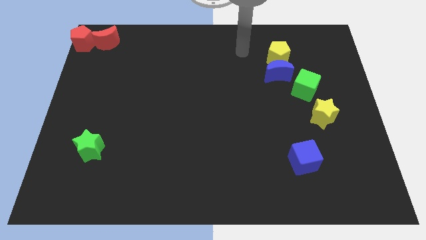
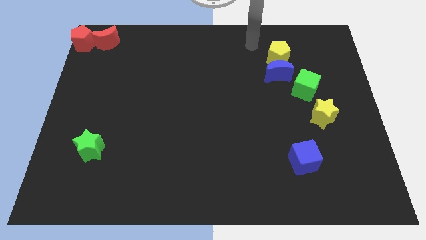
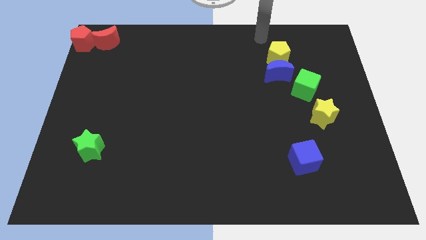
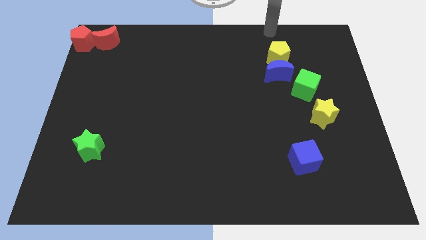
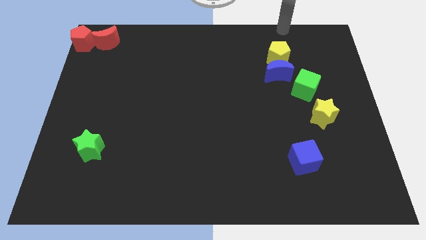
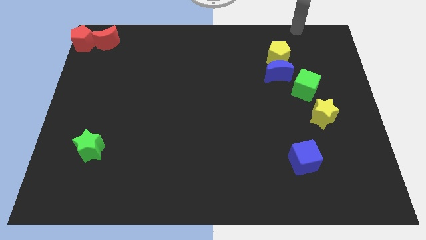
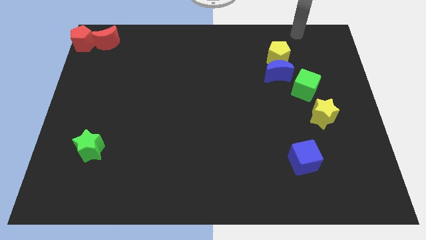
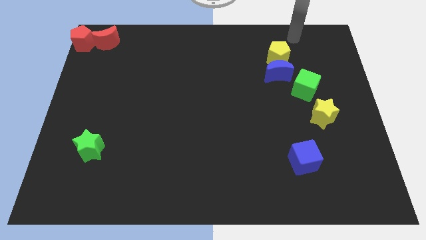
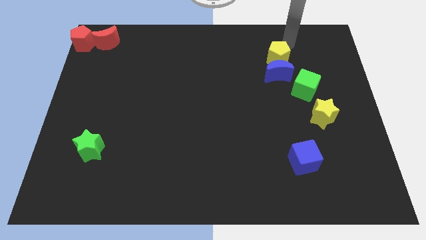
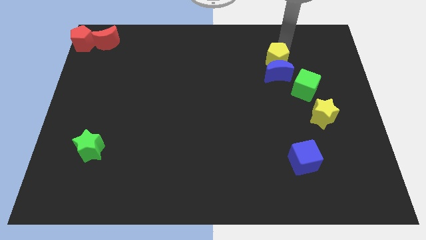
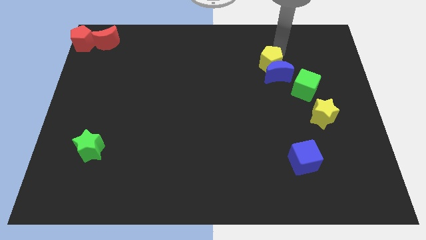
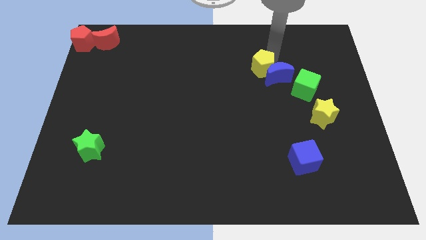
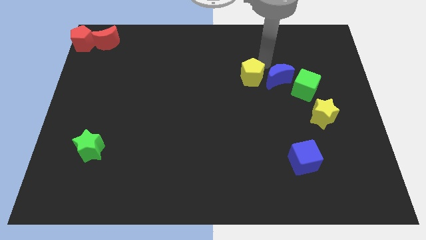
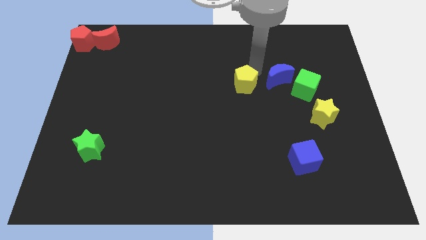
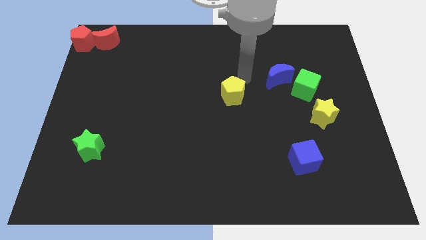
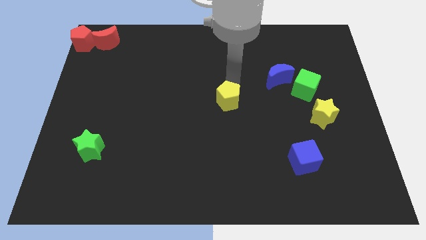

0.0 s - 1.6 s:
take the yellow pentagon away from the blue crescent

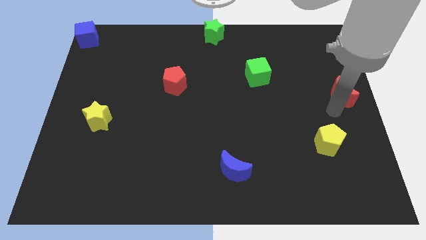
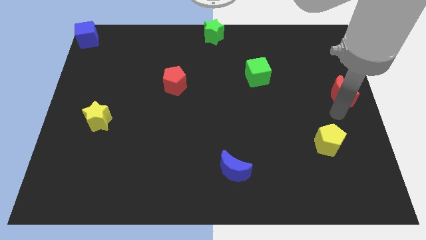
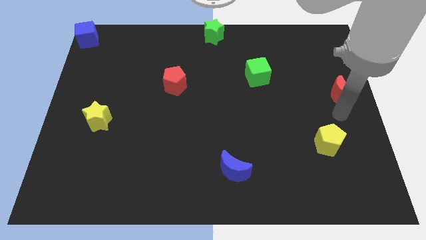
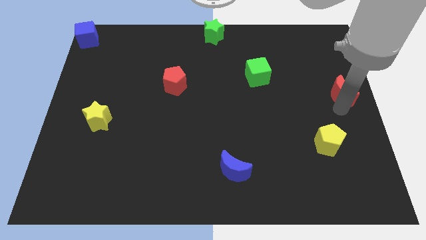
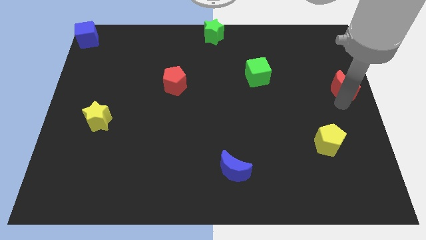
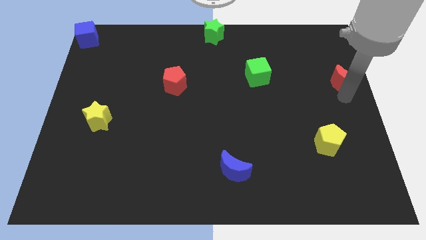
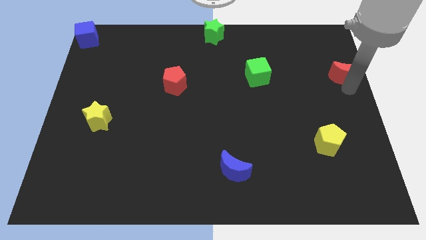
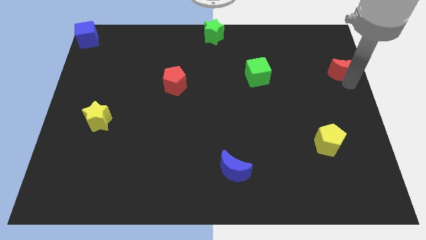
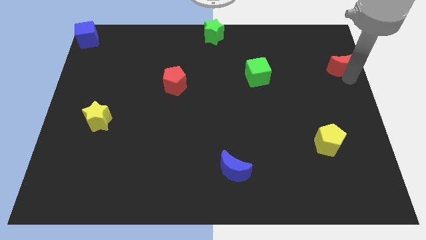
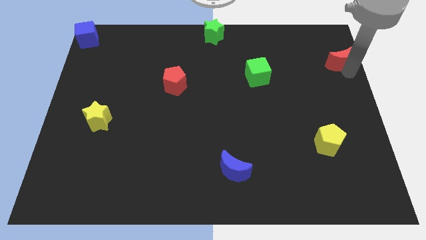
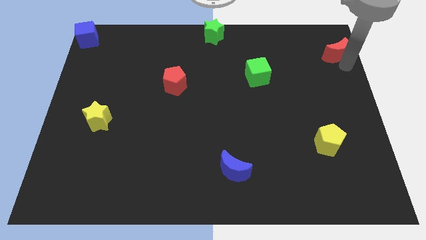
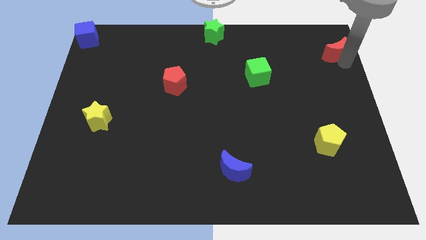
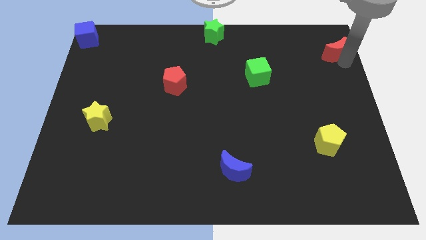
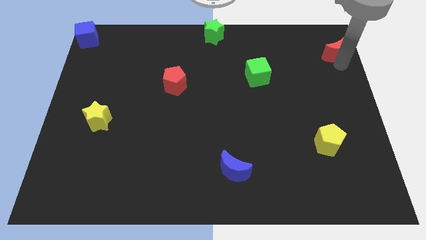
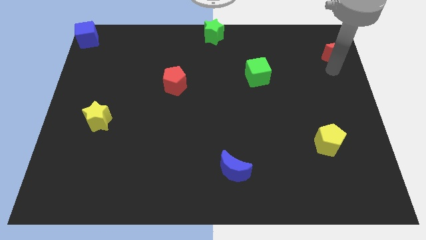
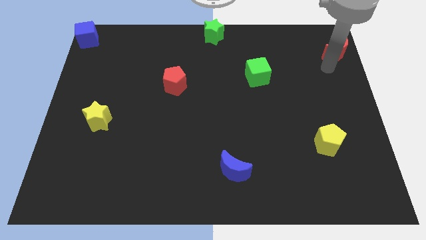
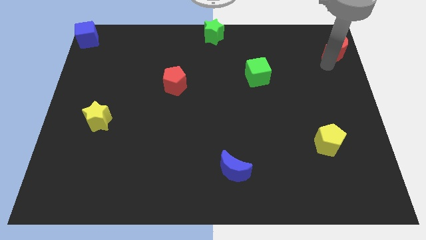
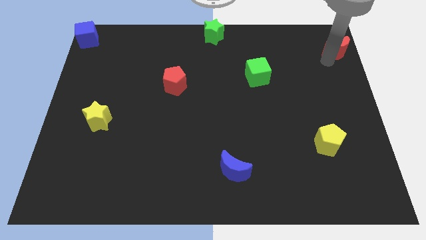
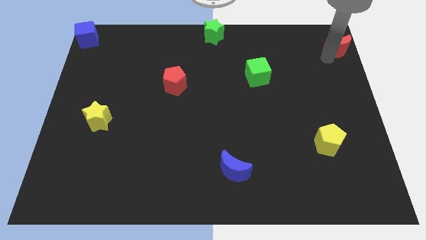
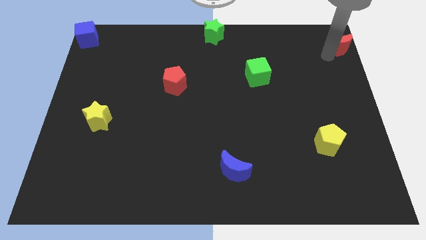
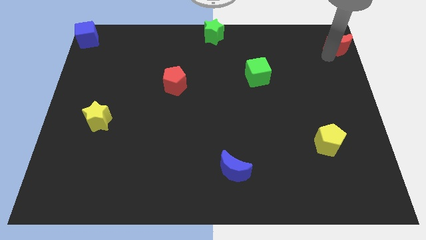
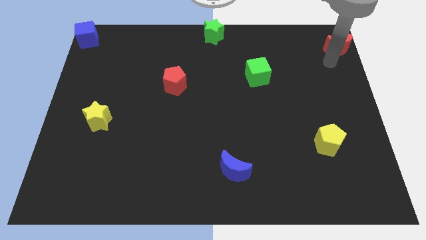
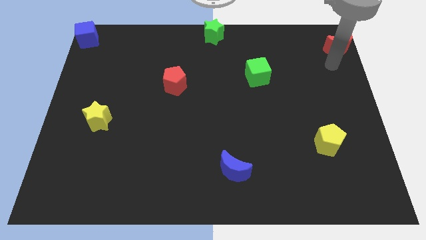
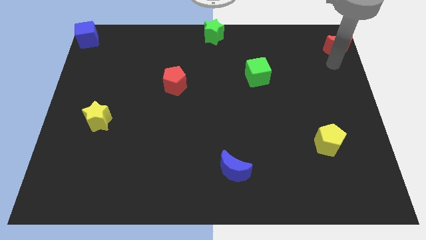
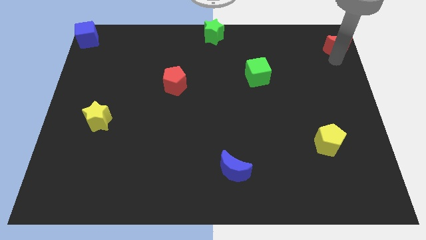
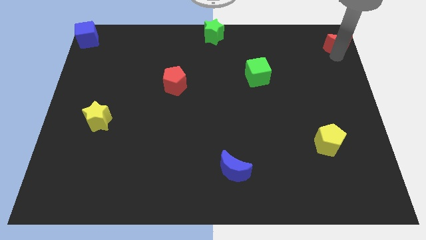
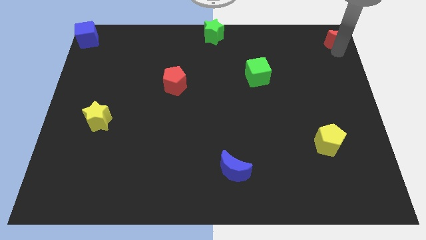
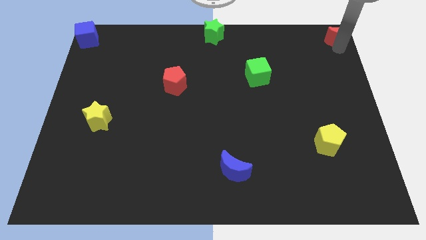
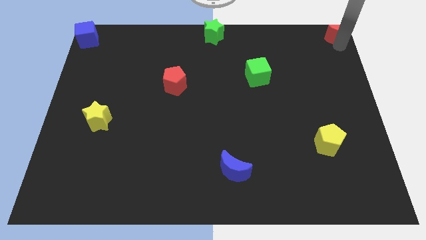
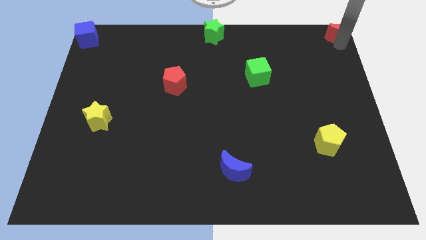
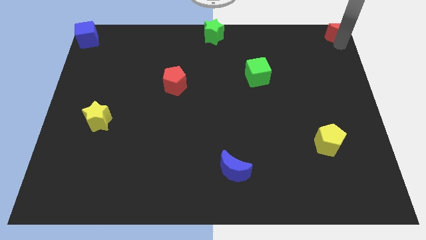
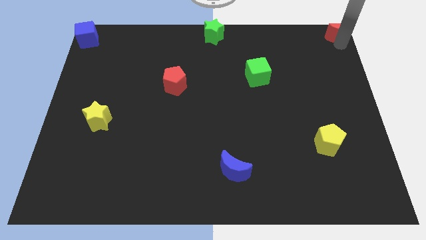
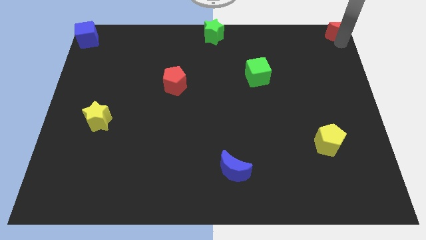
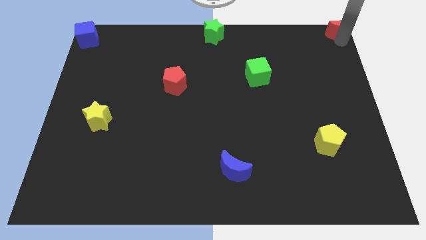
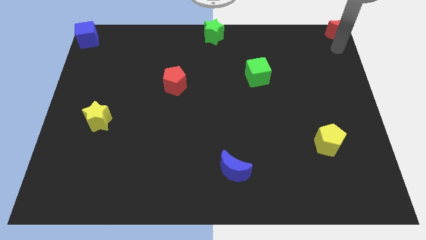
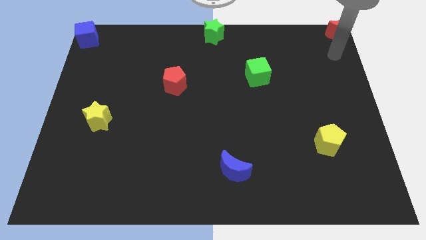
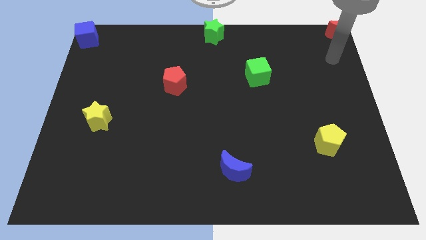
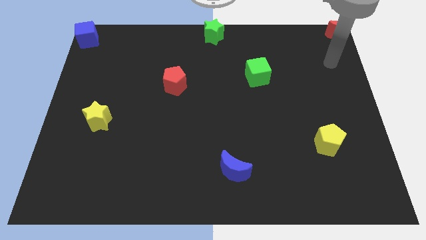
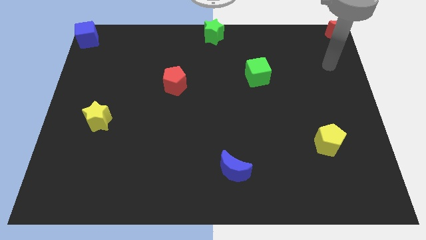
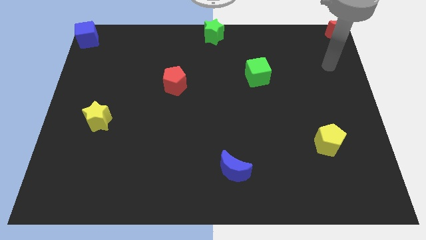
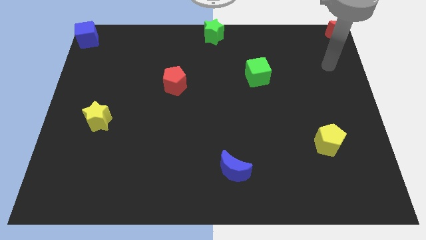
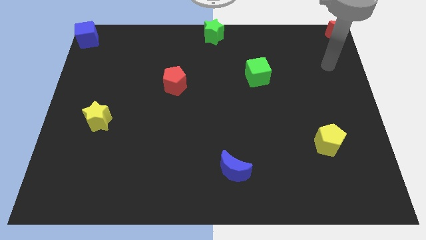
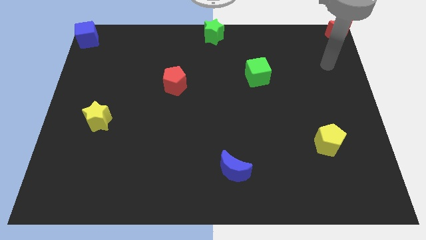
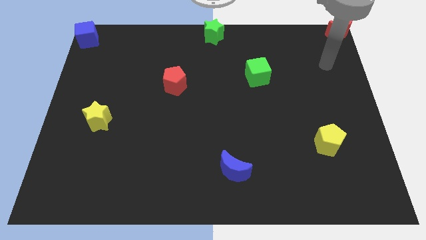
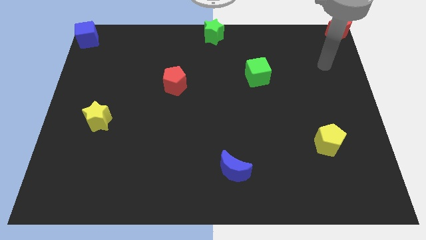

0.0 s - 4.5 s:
push red moon towards top right corner of the board

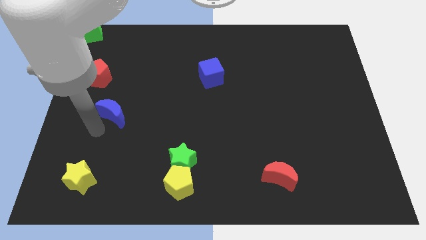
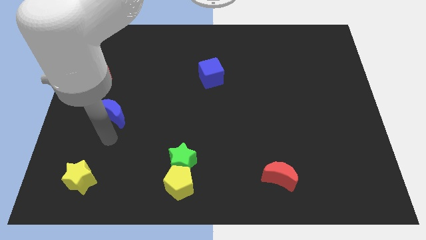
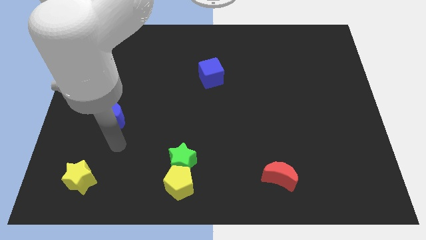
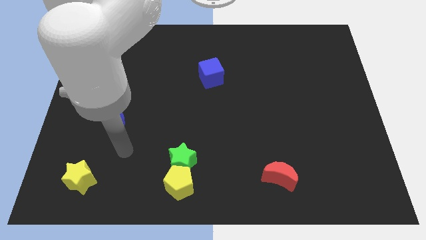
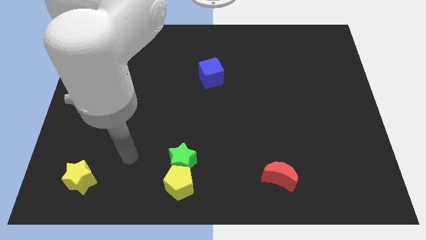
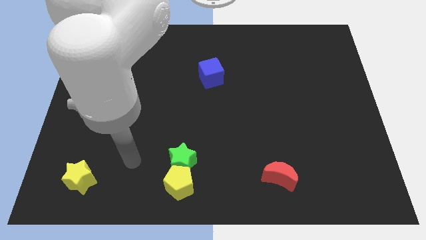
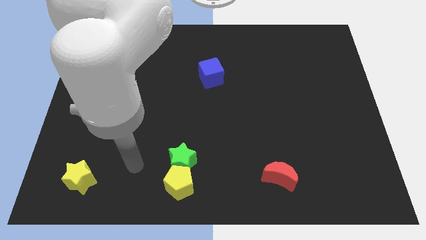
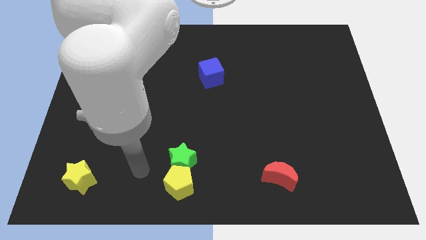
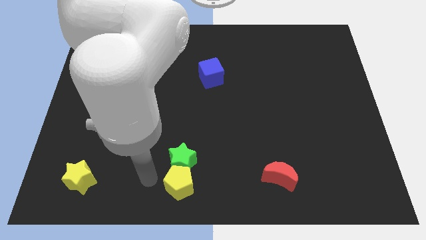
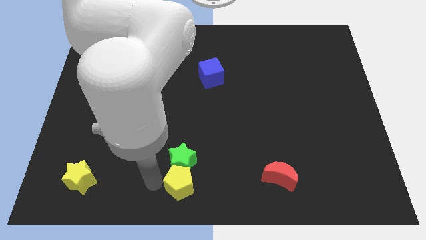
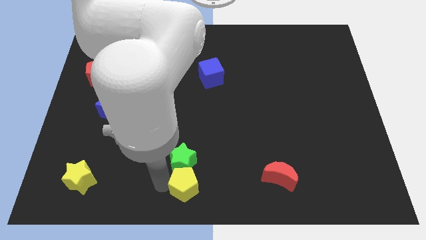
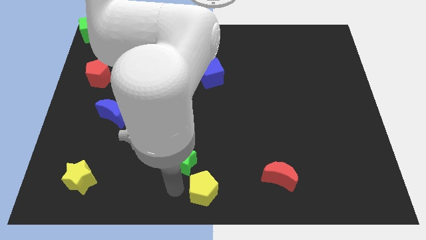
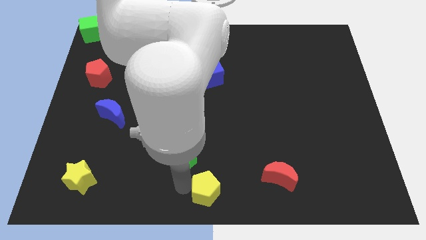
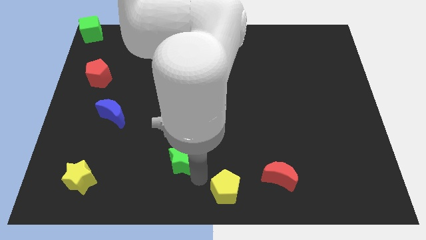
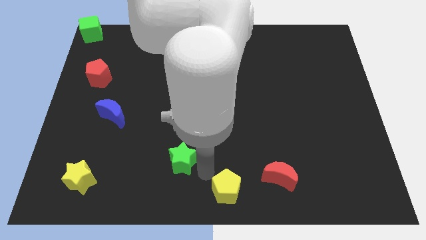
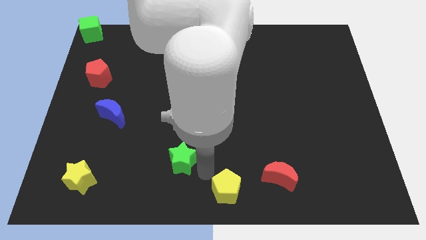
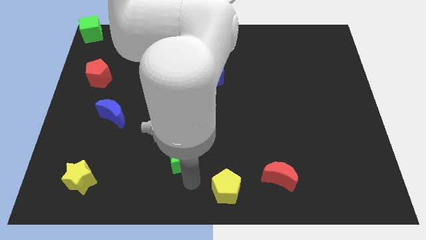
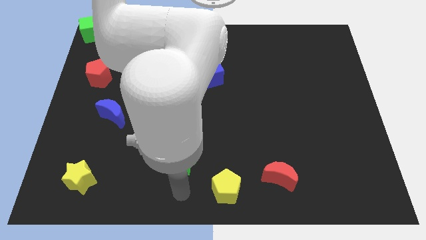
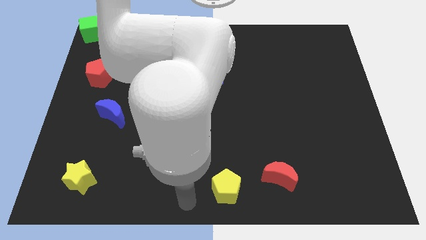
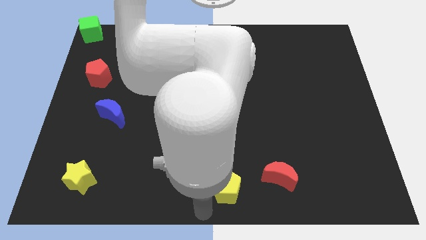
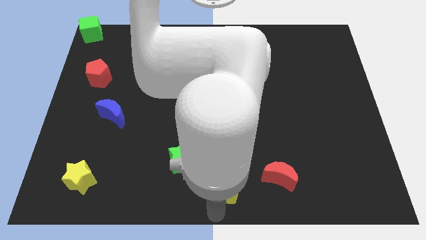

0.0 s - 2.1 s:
move the yellow pentagon to the bottom center of the board

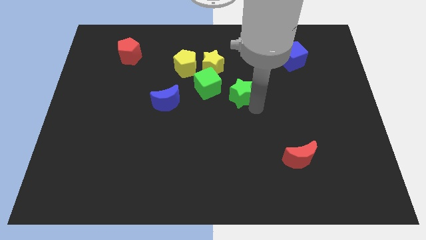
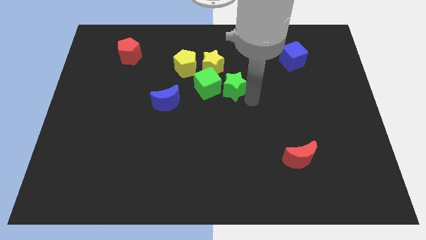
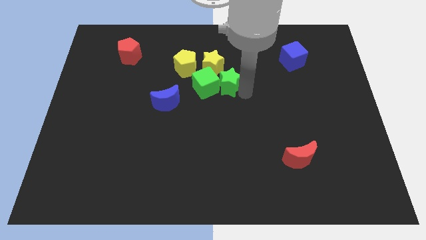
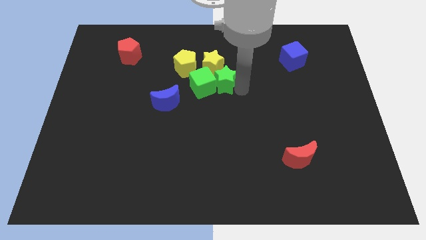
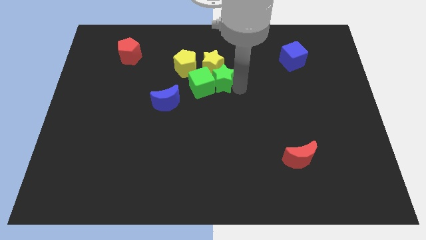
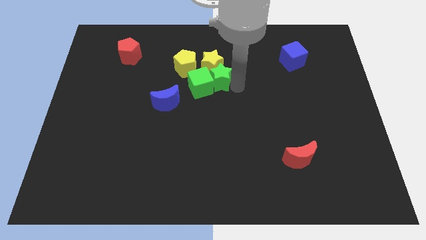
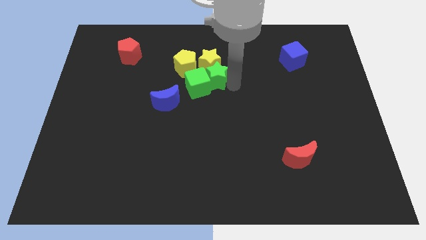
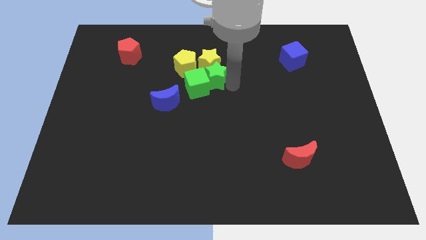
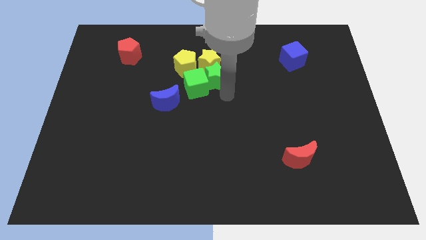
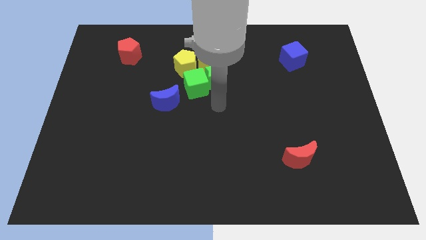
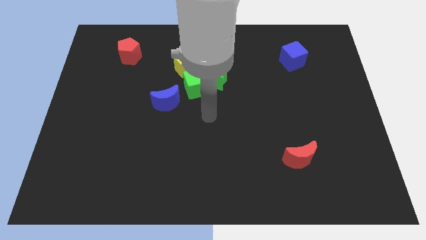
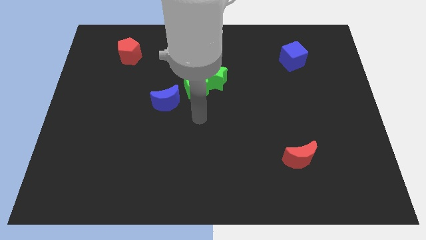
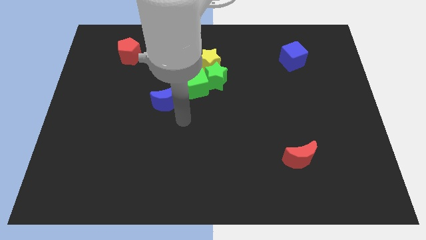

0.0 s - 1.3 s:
push green star in to green cube
